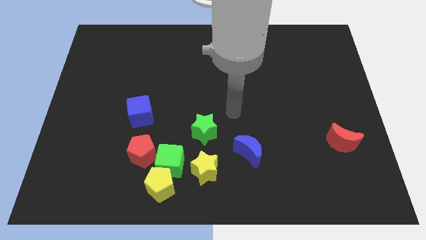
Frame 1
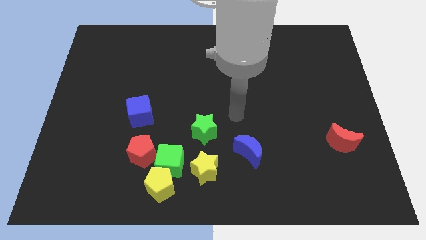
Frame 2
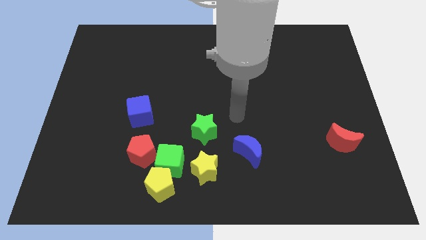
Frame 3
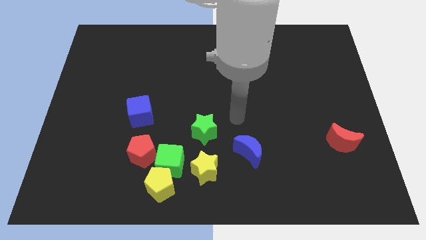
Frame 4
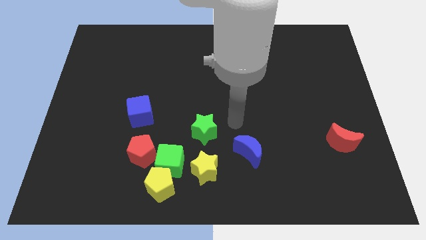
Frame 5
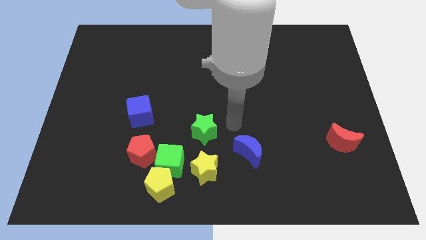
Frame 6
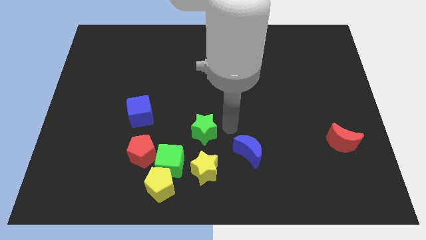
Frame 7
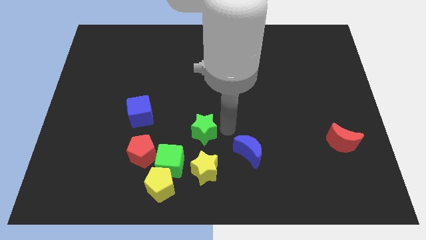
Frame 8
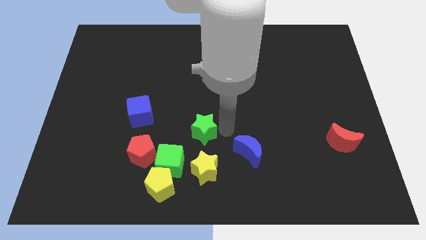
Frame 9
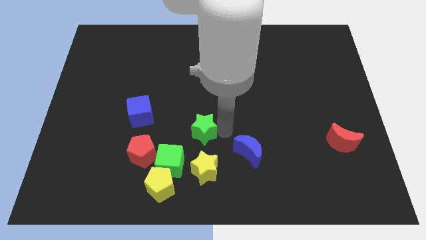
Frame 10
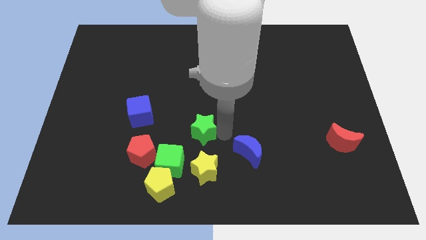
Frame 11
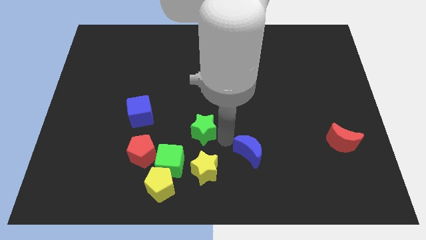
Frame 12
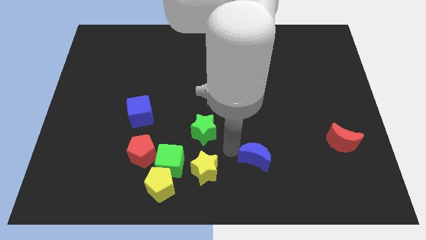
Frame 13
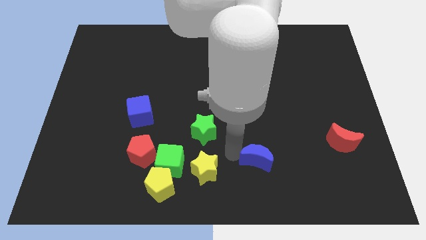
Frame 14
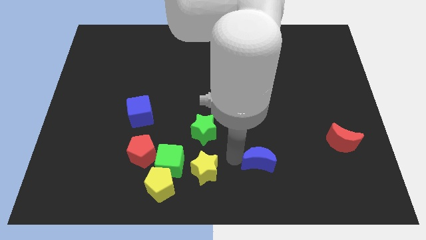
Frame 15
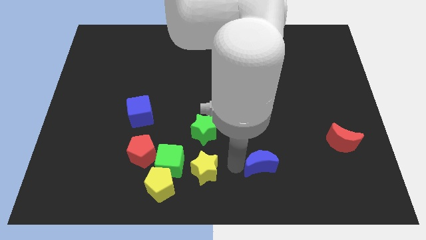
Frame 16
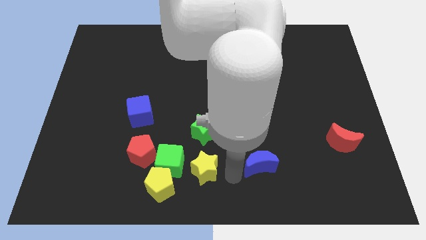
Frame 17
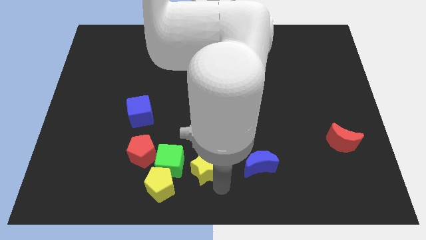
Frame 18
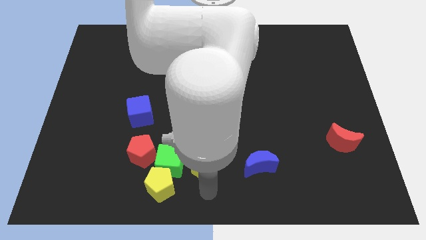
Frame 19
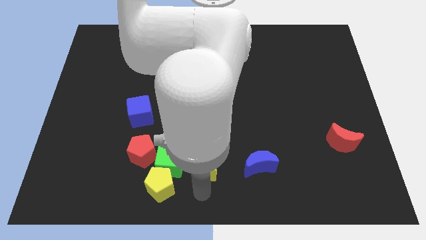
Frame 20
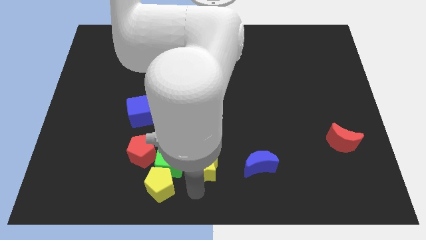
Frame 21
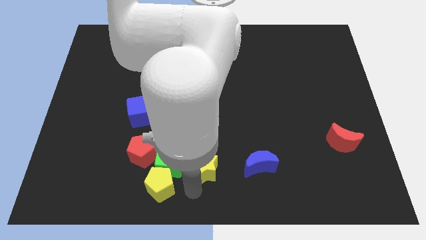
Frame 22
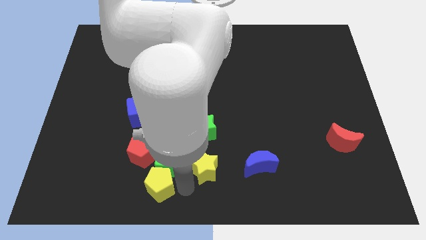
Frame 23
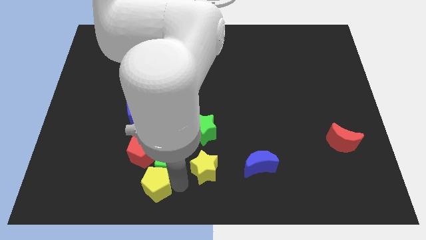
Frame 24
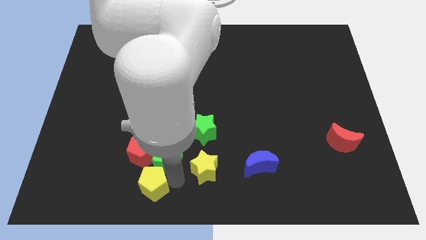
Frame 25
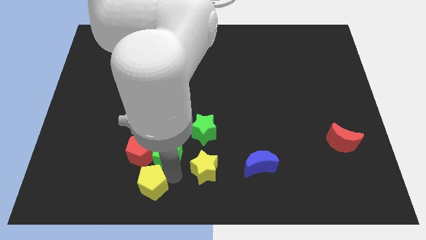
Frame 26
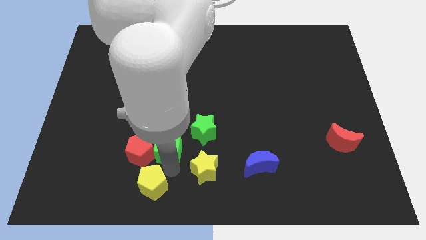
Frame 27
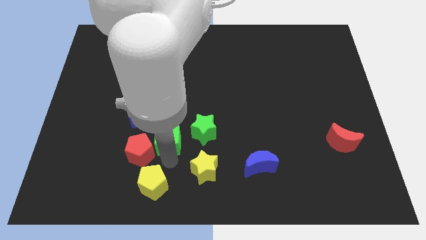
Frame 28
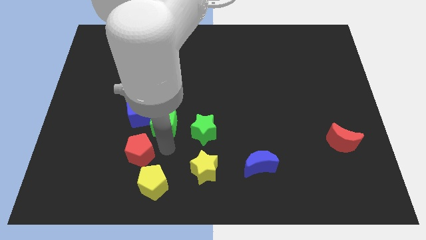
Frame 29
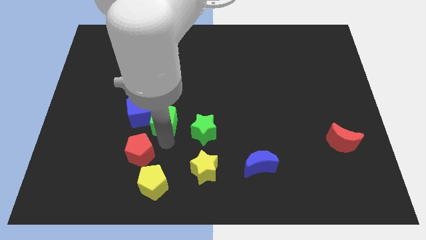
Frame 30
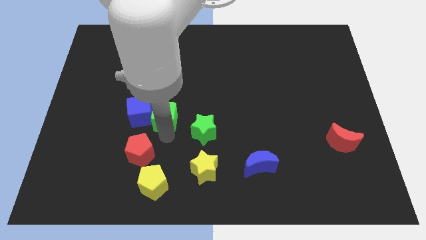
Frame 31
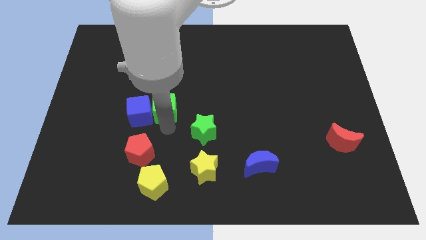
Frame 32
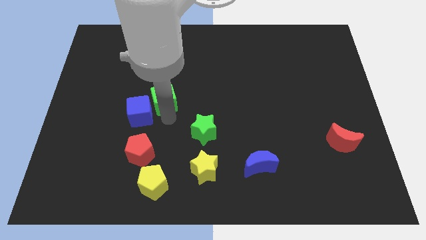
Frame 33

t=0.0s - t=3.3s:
put the green cube parallel right to the blue cube

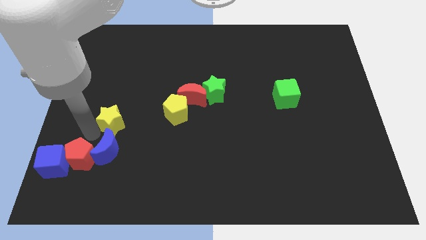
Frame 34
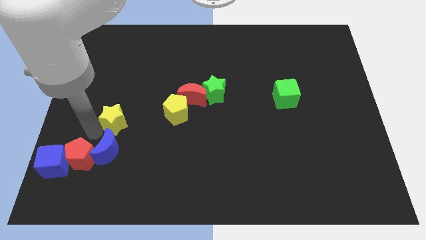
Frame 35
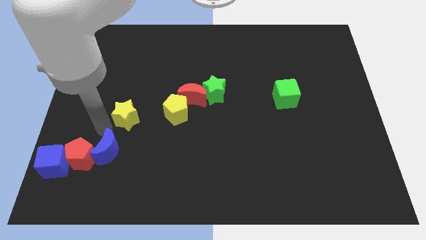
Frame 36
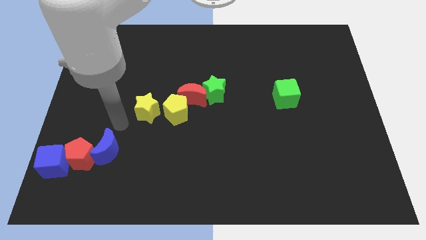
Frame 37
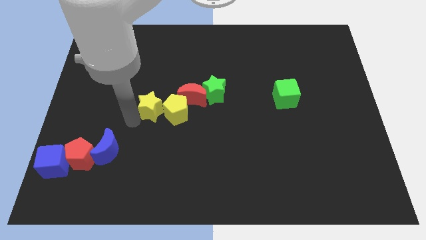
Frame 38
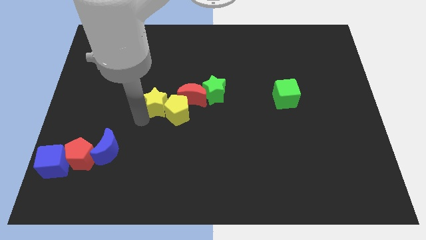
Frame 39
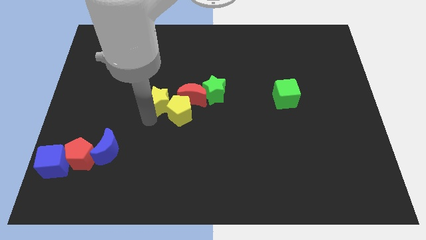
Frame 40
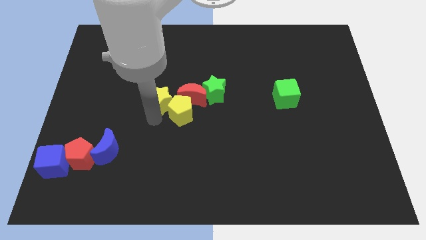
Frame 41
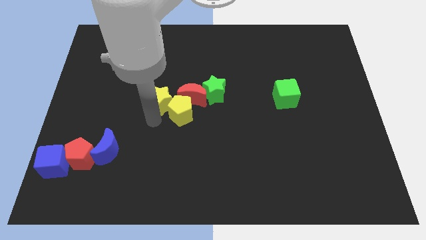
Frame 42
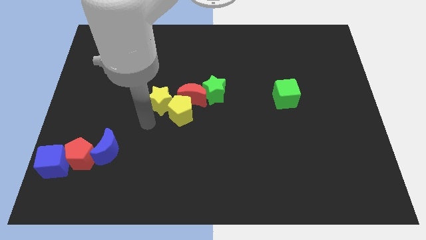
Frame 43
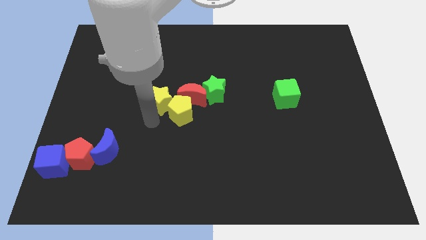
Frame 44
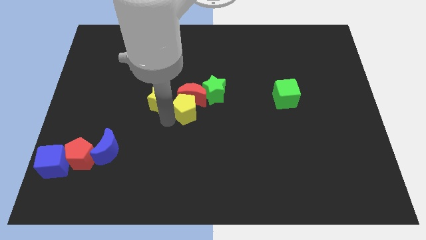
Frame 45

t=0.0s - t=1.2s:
push the yellow star into the yellow pentagon

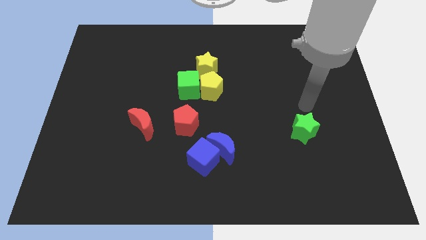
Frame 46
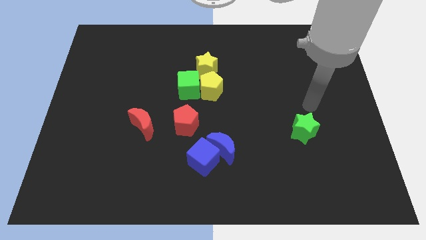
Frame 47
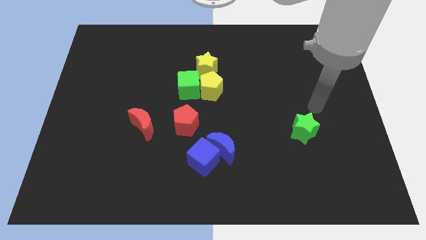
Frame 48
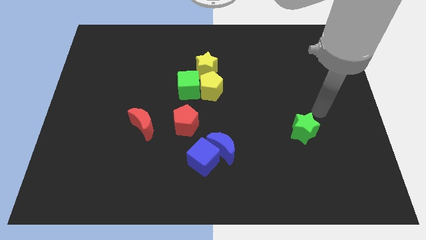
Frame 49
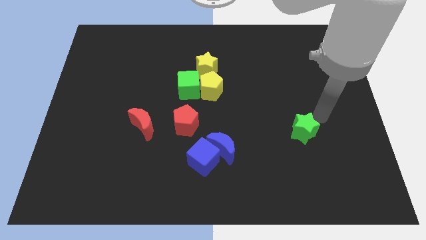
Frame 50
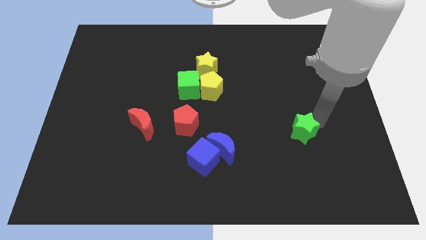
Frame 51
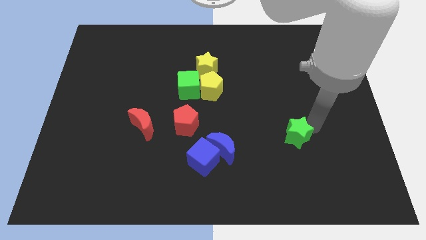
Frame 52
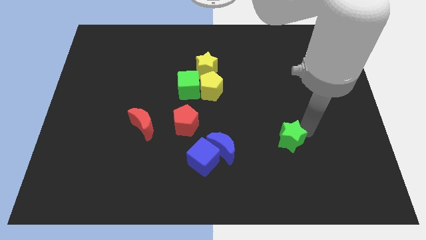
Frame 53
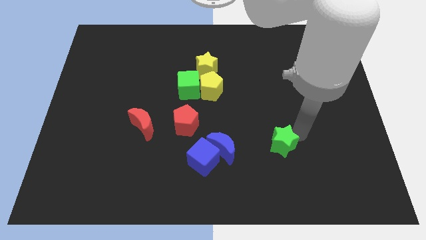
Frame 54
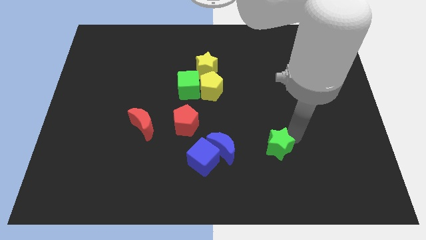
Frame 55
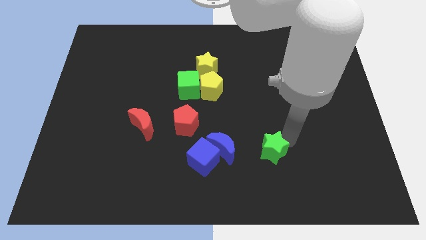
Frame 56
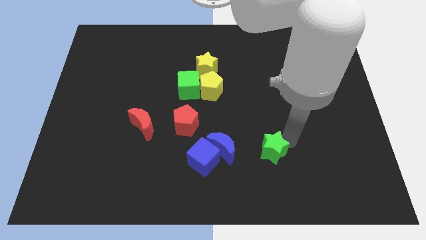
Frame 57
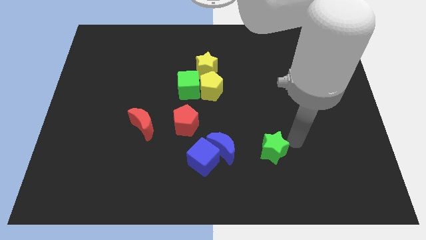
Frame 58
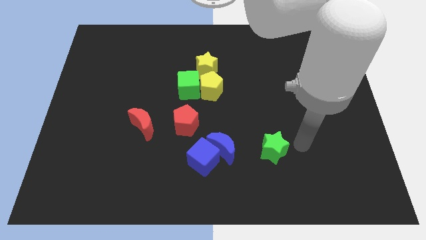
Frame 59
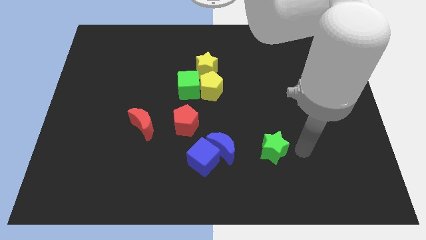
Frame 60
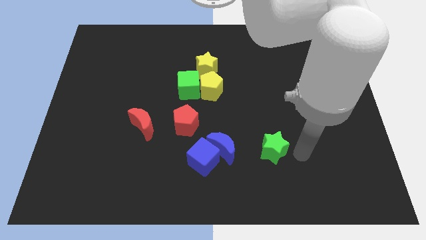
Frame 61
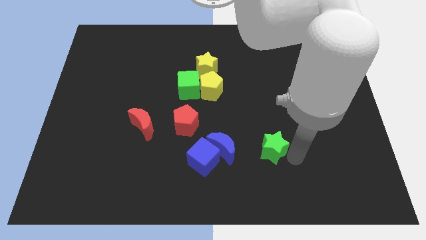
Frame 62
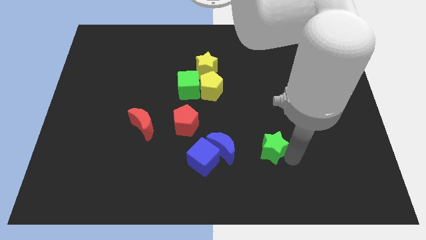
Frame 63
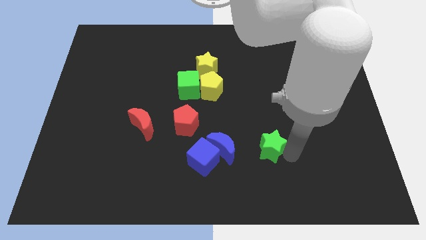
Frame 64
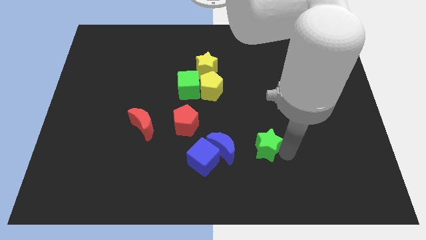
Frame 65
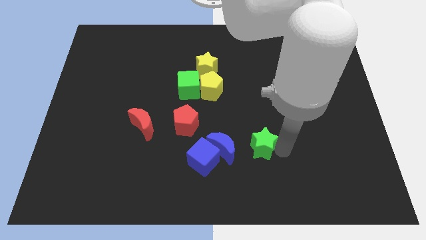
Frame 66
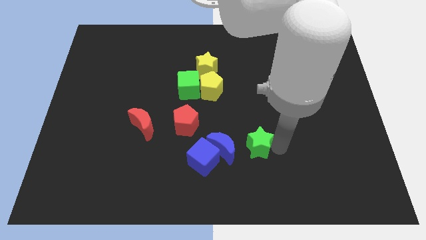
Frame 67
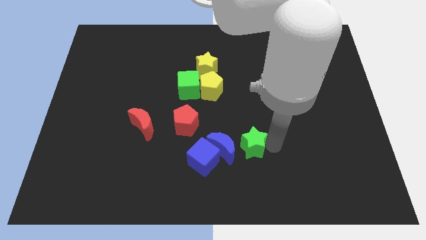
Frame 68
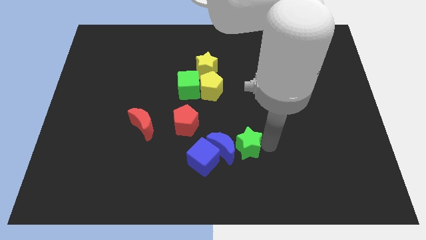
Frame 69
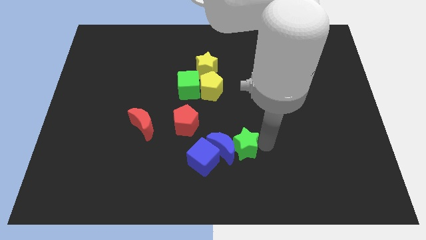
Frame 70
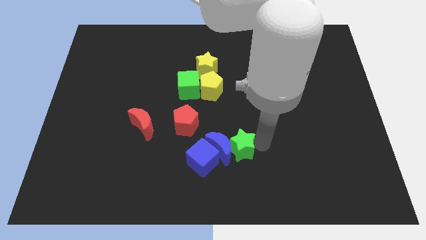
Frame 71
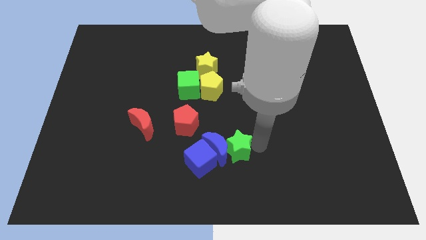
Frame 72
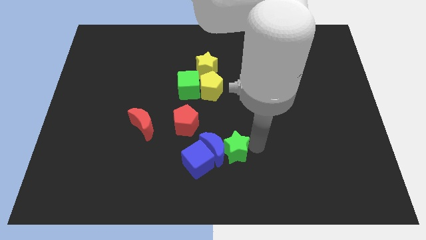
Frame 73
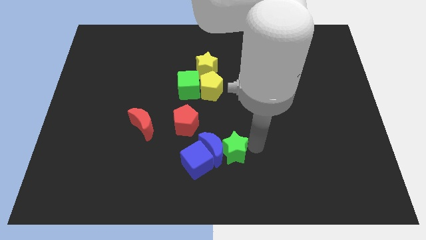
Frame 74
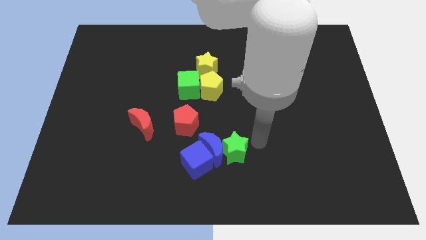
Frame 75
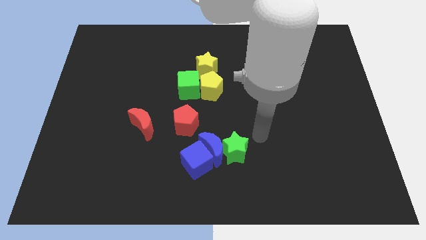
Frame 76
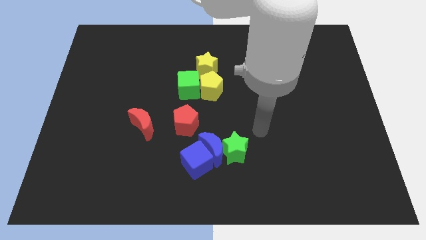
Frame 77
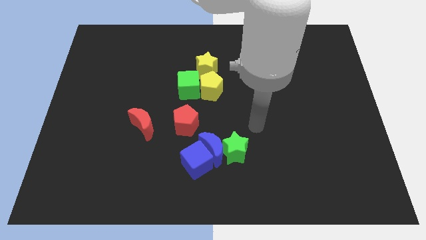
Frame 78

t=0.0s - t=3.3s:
push the green star into the blue crescent

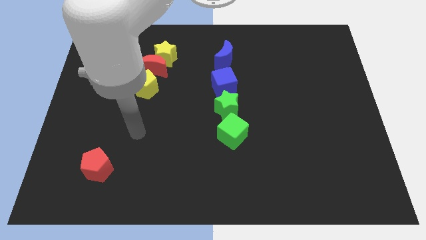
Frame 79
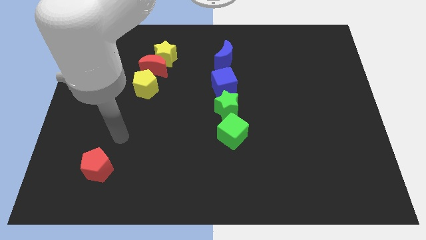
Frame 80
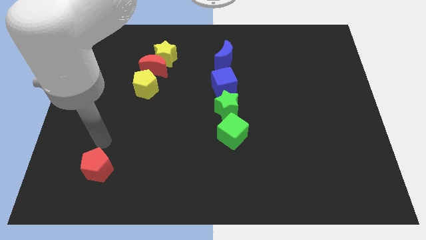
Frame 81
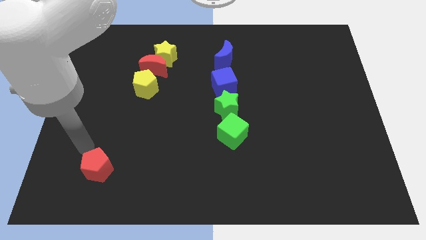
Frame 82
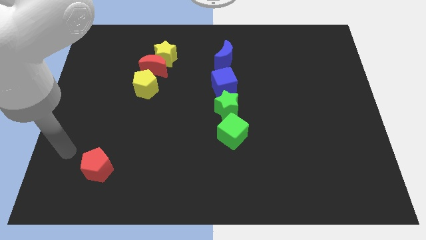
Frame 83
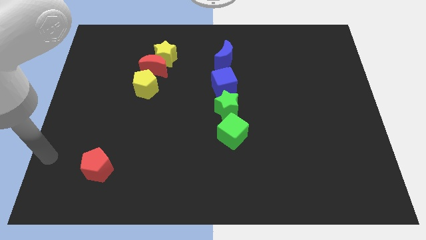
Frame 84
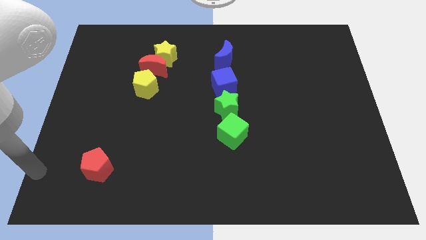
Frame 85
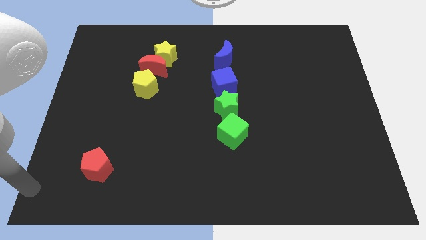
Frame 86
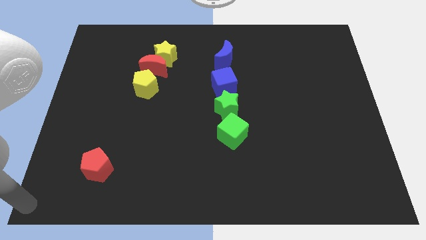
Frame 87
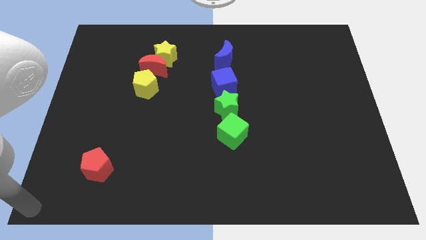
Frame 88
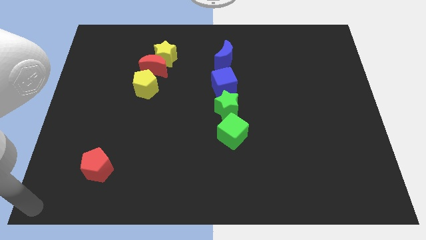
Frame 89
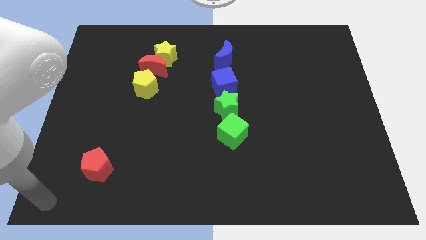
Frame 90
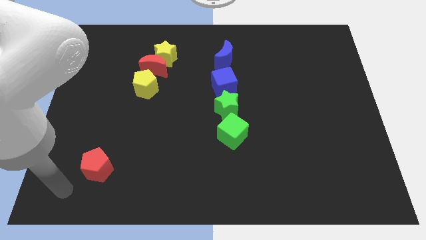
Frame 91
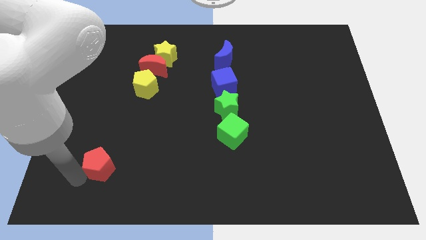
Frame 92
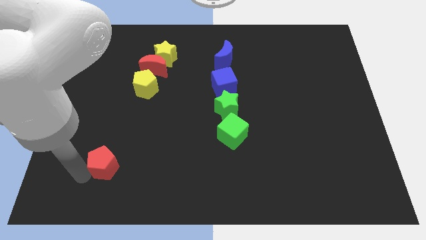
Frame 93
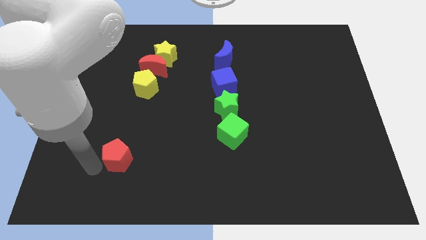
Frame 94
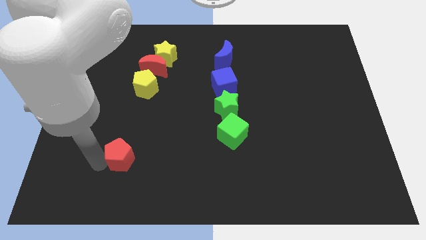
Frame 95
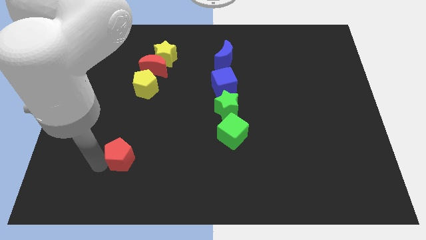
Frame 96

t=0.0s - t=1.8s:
drag the red pentagon towards the green cube
